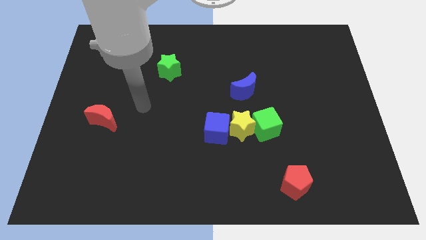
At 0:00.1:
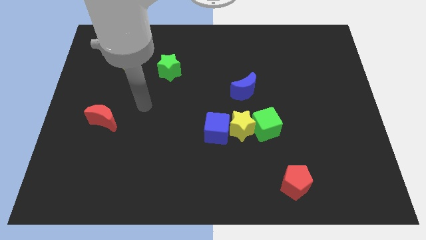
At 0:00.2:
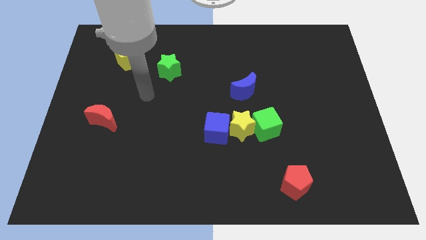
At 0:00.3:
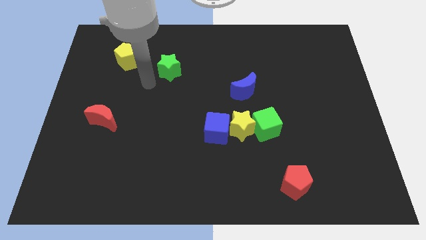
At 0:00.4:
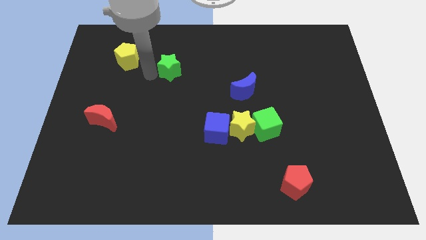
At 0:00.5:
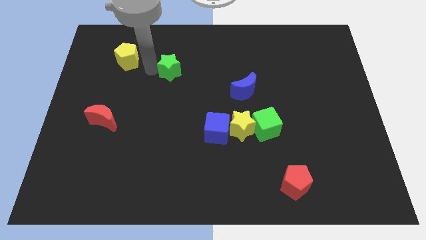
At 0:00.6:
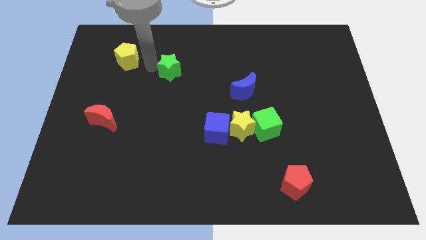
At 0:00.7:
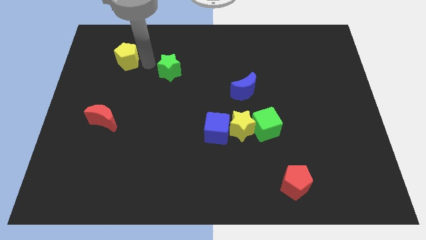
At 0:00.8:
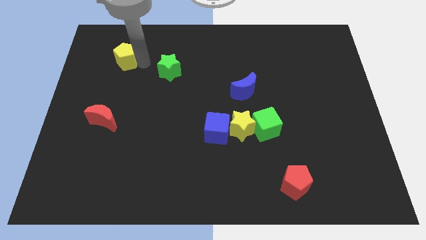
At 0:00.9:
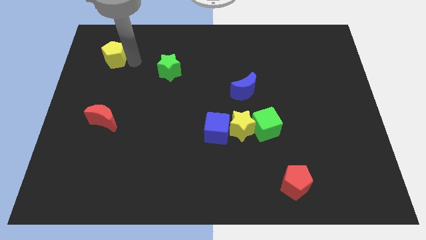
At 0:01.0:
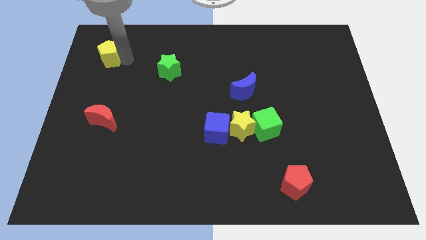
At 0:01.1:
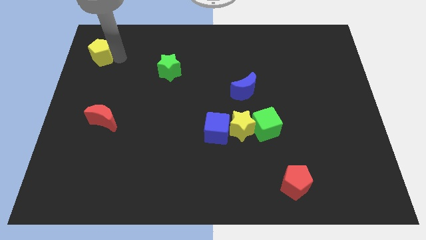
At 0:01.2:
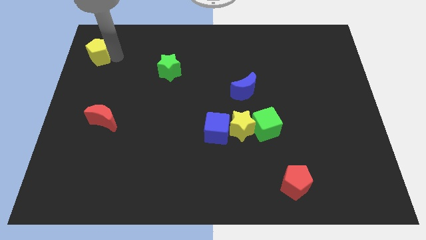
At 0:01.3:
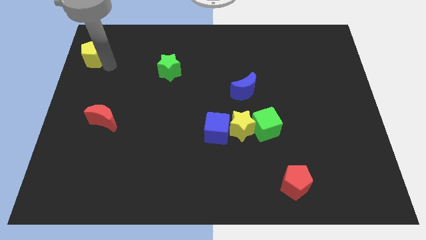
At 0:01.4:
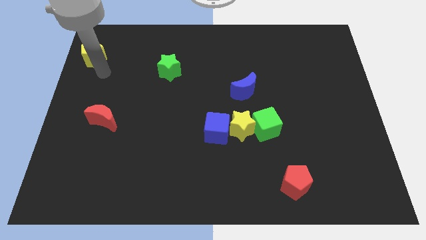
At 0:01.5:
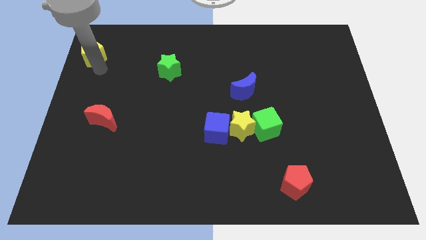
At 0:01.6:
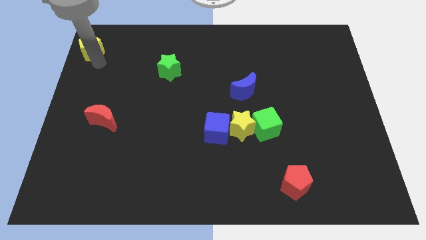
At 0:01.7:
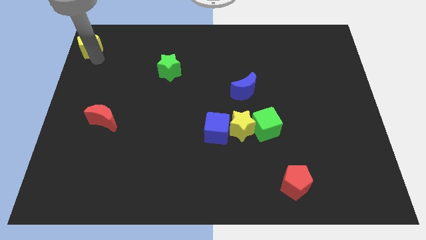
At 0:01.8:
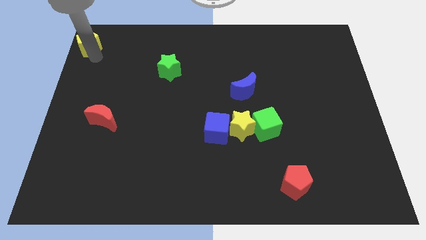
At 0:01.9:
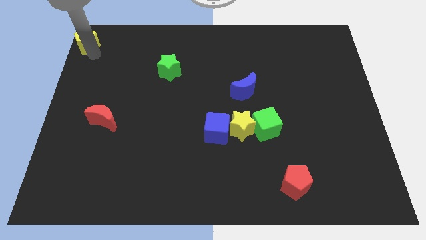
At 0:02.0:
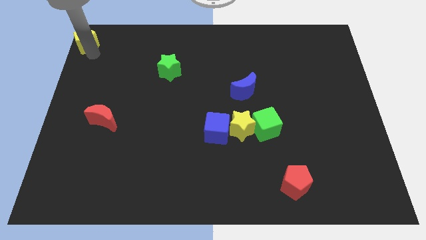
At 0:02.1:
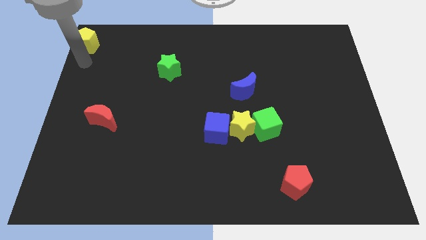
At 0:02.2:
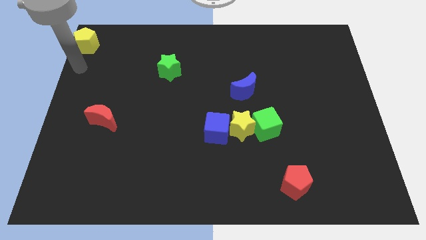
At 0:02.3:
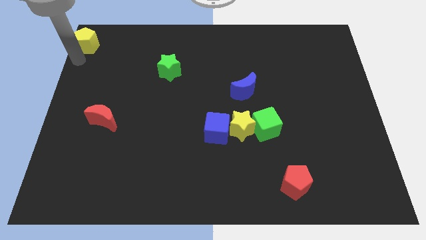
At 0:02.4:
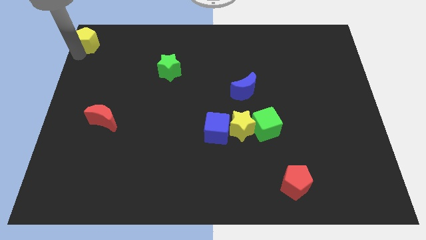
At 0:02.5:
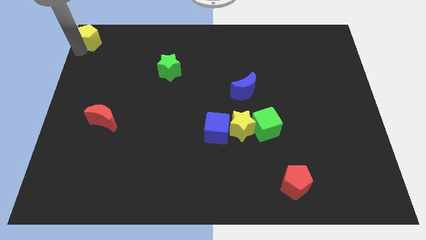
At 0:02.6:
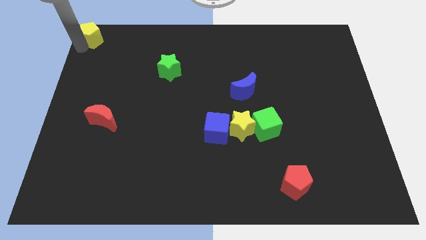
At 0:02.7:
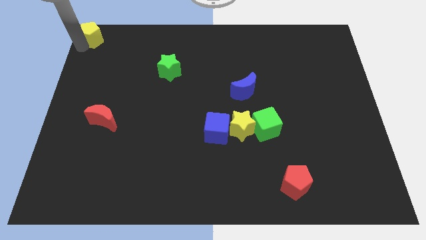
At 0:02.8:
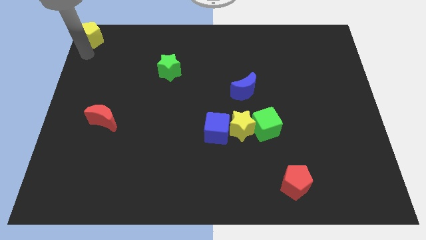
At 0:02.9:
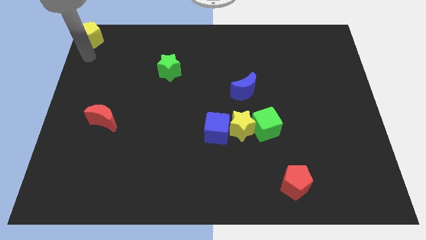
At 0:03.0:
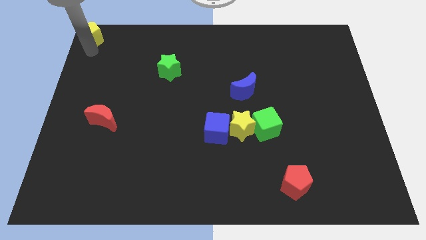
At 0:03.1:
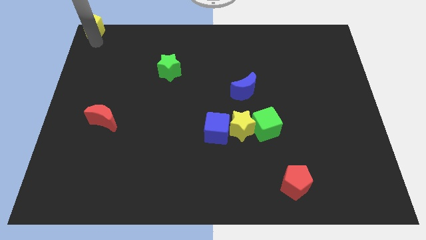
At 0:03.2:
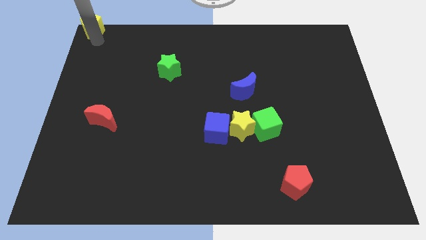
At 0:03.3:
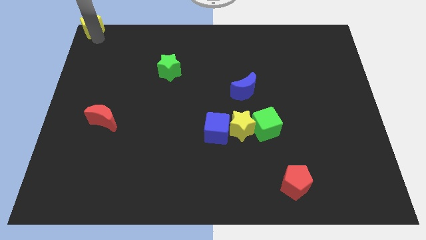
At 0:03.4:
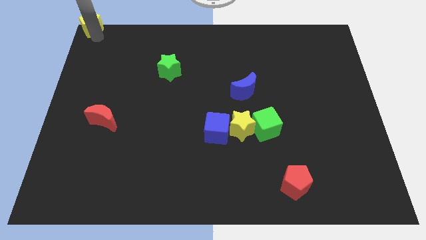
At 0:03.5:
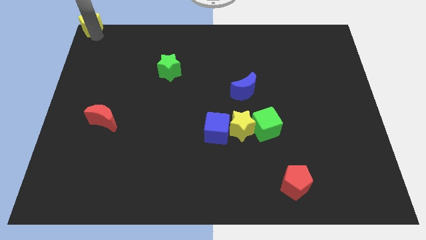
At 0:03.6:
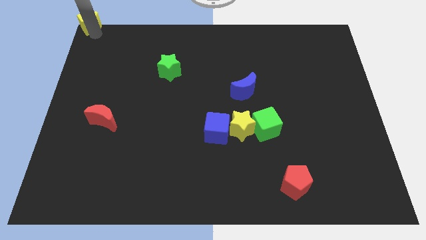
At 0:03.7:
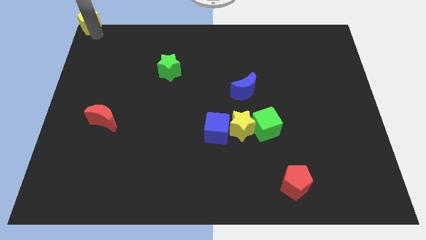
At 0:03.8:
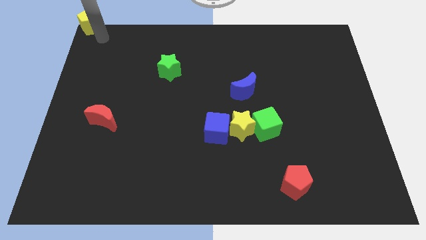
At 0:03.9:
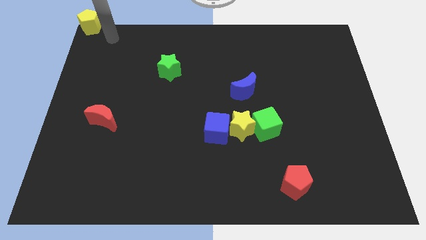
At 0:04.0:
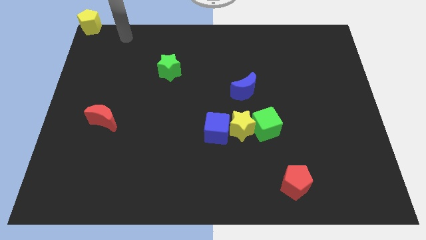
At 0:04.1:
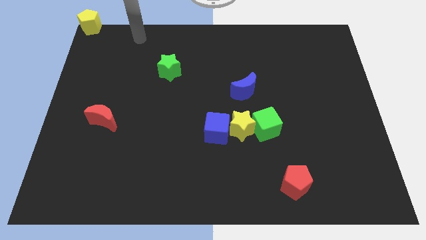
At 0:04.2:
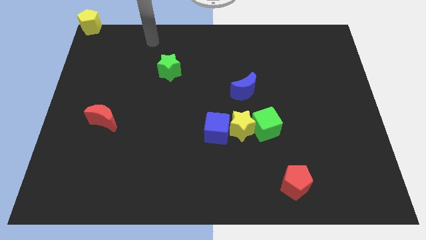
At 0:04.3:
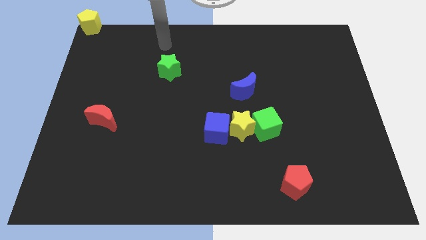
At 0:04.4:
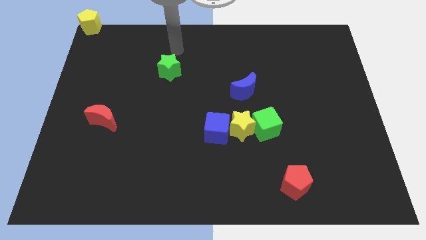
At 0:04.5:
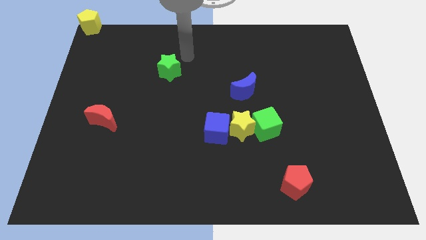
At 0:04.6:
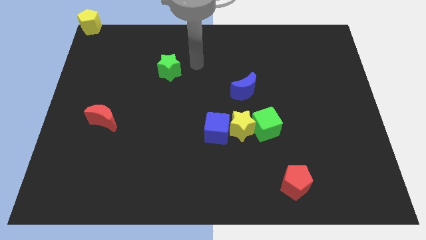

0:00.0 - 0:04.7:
push the yellow pentagon to the top left corner of the board

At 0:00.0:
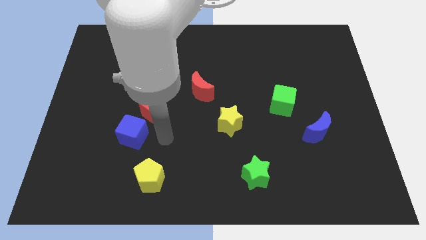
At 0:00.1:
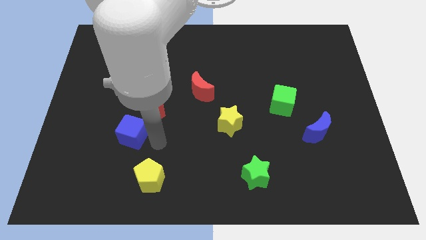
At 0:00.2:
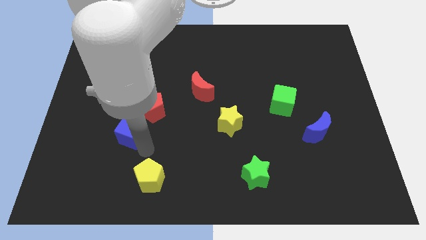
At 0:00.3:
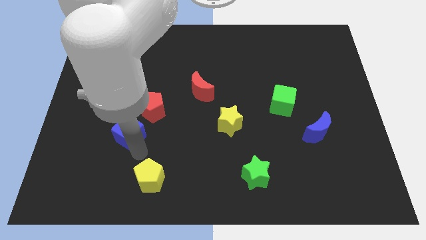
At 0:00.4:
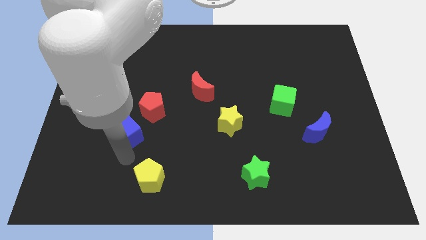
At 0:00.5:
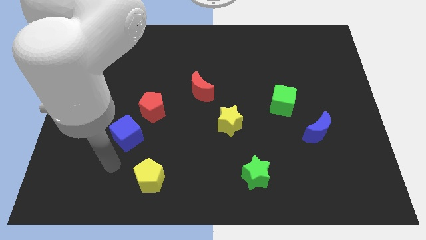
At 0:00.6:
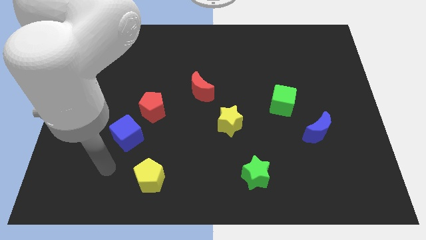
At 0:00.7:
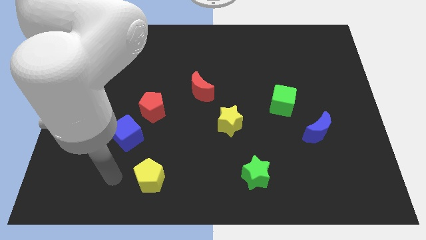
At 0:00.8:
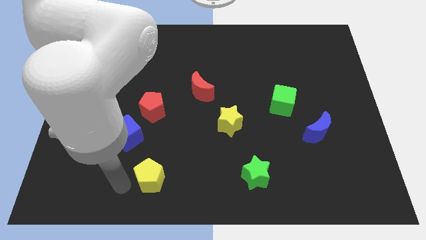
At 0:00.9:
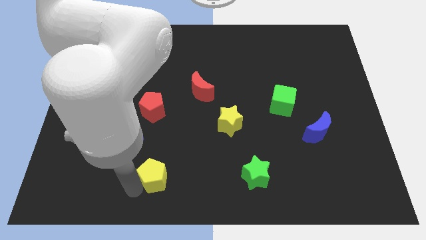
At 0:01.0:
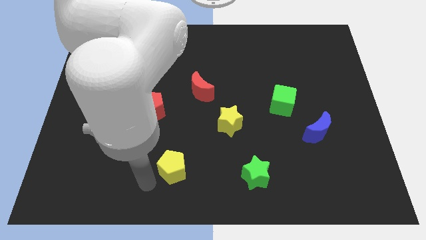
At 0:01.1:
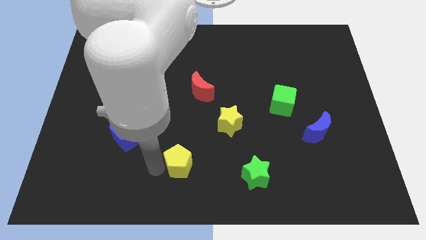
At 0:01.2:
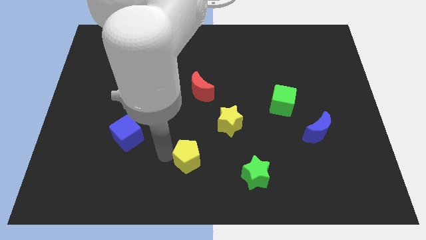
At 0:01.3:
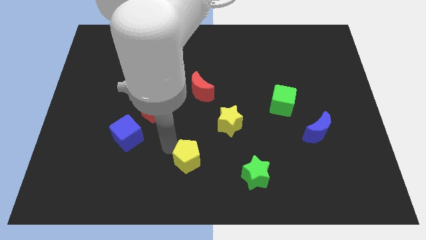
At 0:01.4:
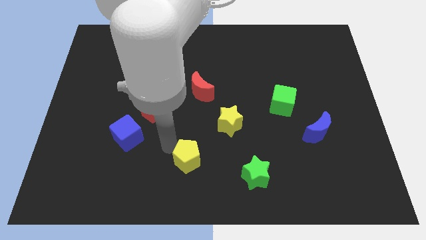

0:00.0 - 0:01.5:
slightly move yellow pentagon parallel to the bottom left to the yellow star

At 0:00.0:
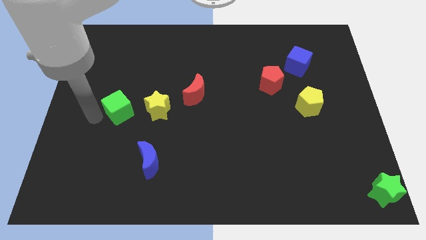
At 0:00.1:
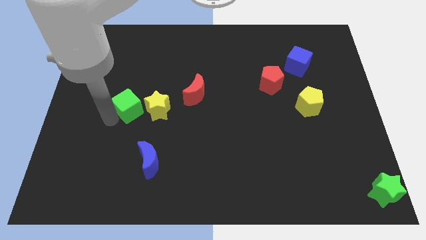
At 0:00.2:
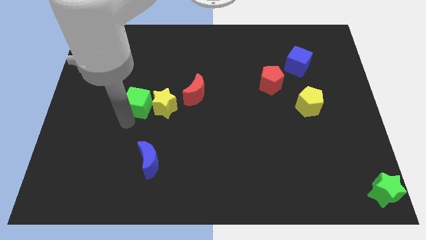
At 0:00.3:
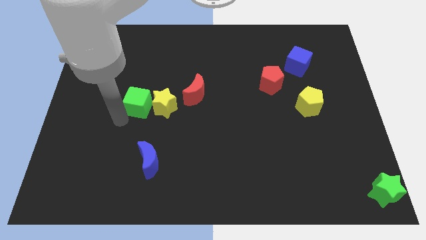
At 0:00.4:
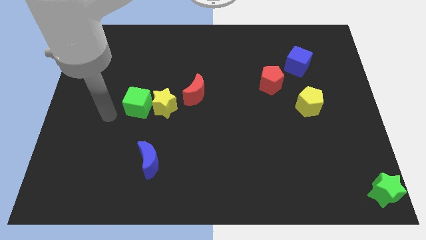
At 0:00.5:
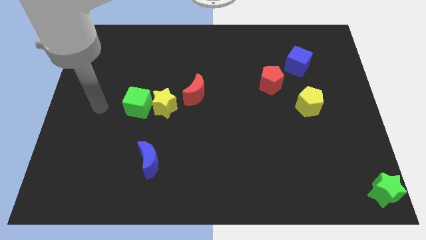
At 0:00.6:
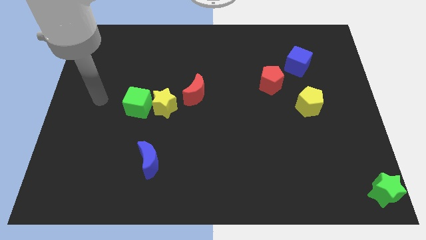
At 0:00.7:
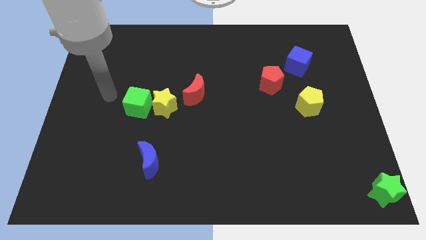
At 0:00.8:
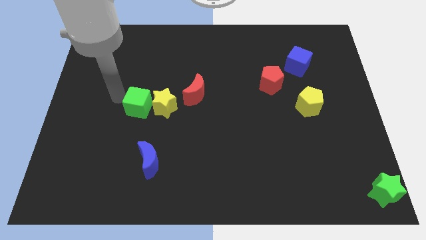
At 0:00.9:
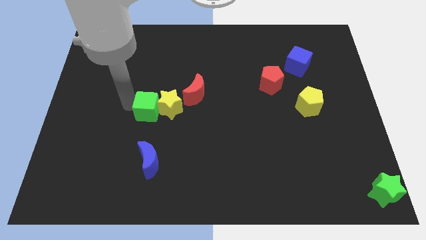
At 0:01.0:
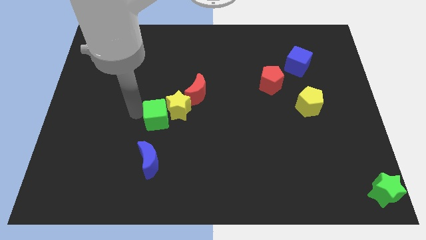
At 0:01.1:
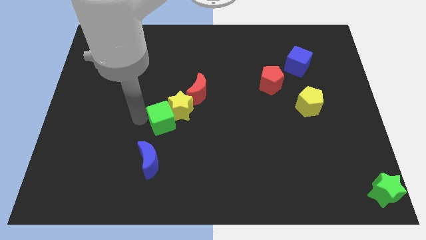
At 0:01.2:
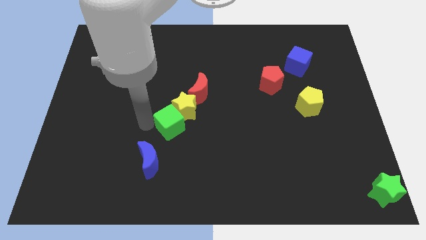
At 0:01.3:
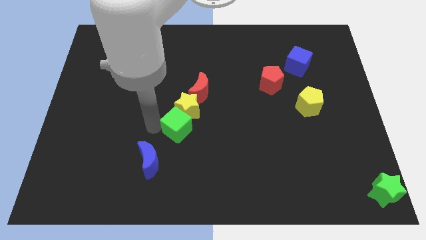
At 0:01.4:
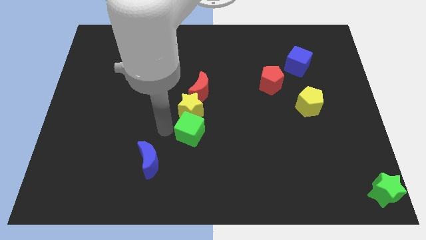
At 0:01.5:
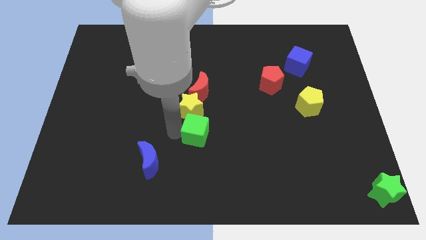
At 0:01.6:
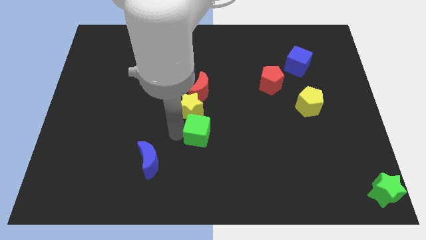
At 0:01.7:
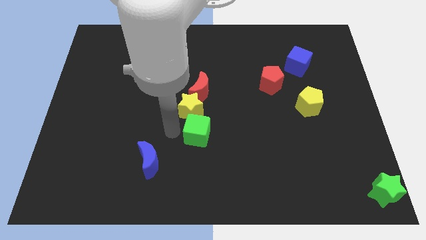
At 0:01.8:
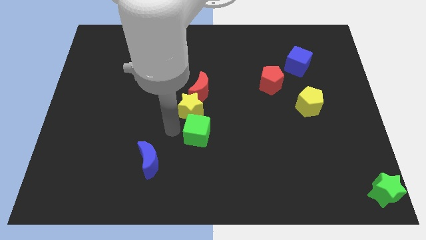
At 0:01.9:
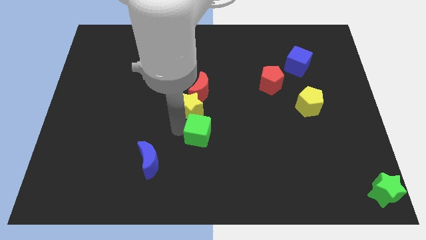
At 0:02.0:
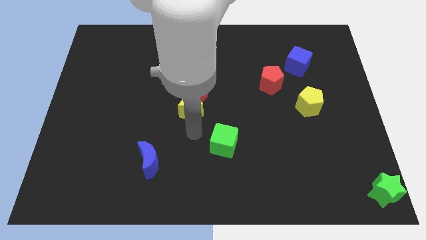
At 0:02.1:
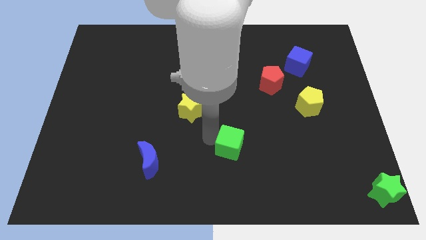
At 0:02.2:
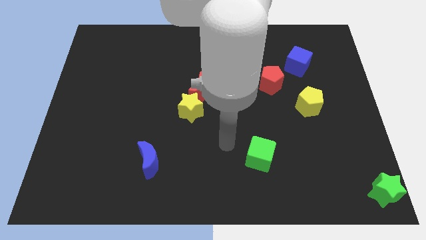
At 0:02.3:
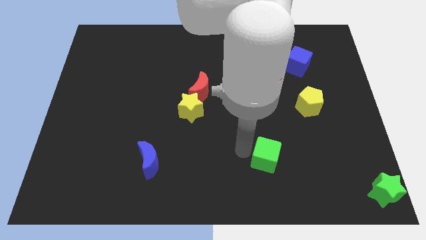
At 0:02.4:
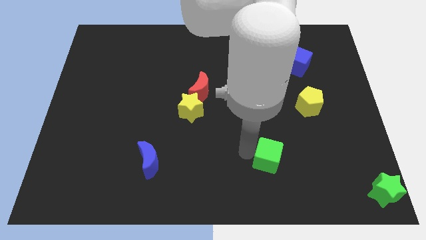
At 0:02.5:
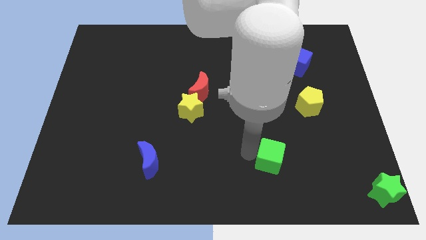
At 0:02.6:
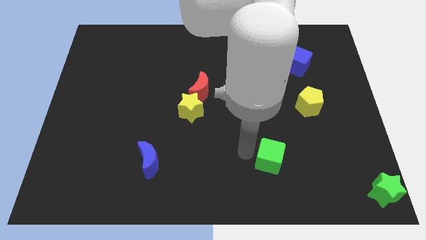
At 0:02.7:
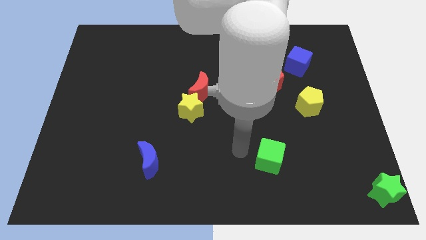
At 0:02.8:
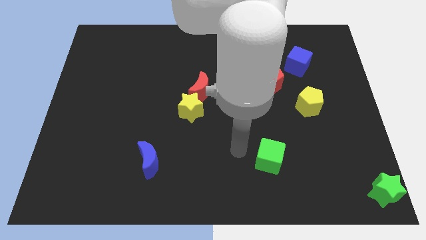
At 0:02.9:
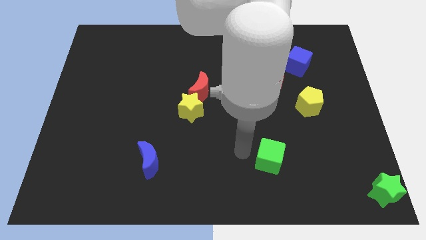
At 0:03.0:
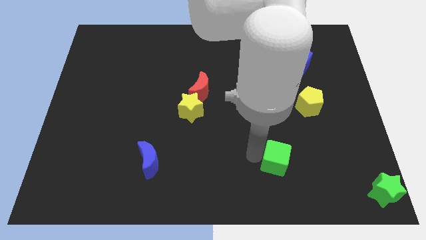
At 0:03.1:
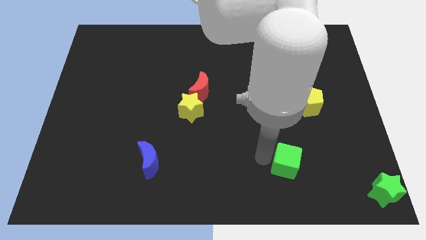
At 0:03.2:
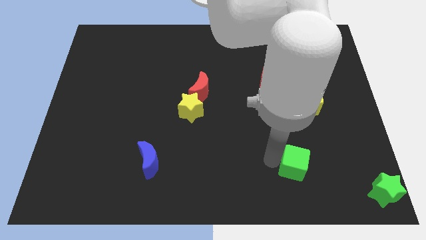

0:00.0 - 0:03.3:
push the green cube diagonally top left to the green star
